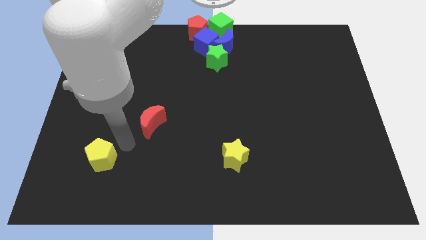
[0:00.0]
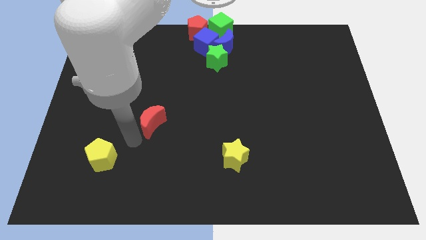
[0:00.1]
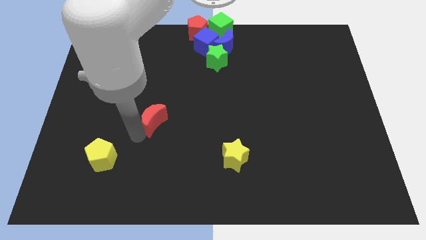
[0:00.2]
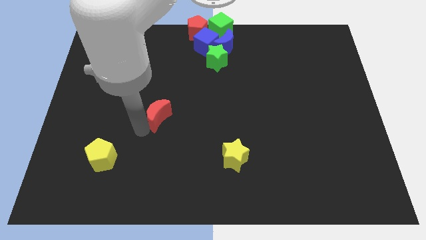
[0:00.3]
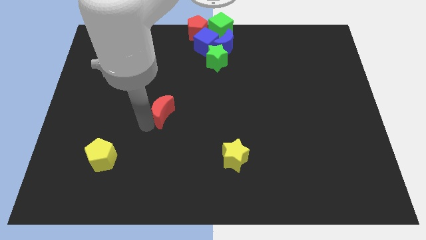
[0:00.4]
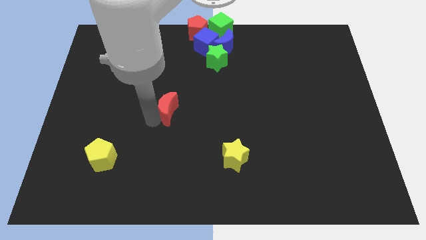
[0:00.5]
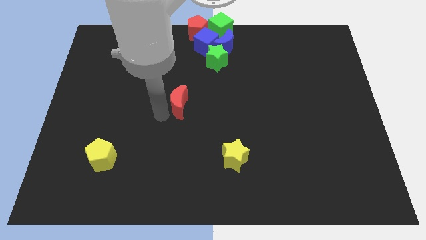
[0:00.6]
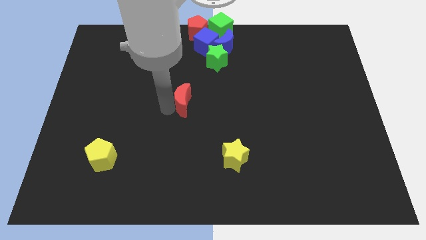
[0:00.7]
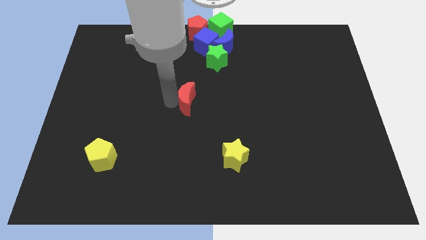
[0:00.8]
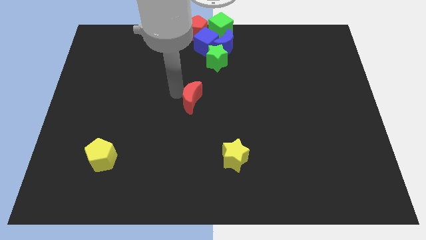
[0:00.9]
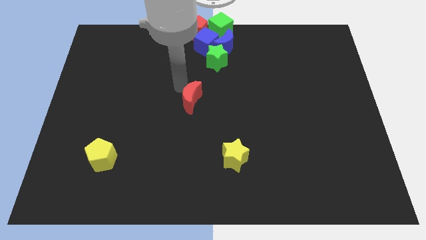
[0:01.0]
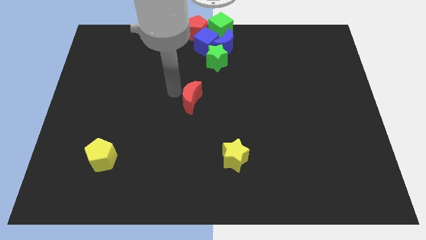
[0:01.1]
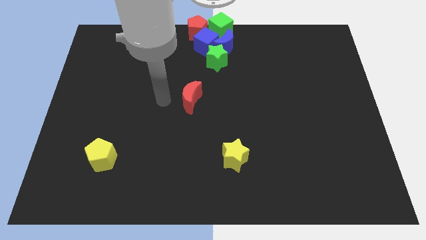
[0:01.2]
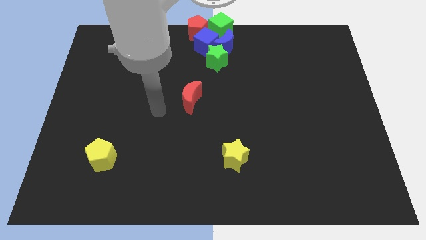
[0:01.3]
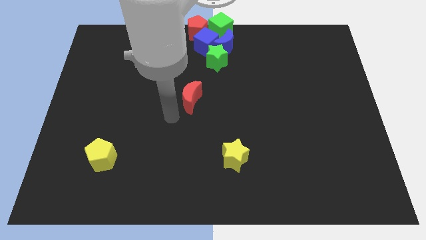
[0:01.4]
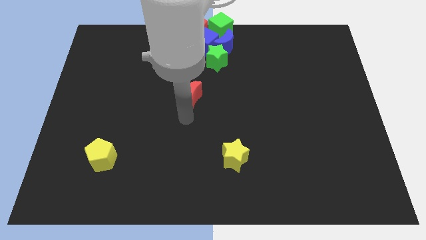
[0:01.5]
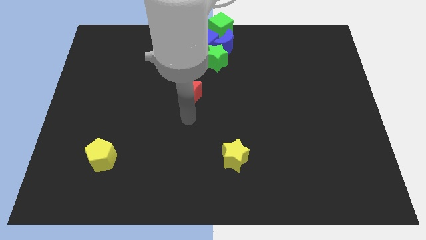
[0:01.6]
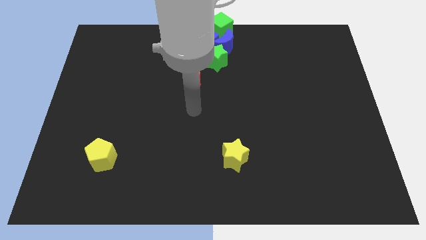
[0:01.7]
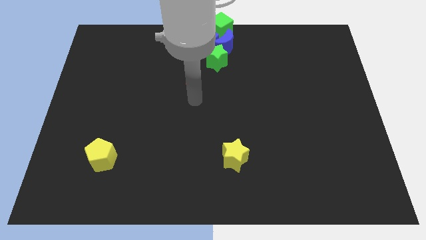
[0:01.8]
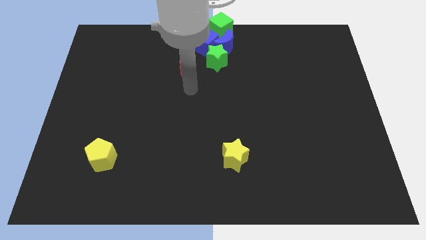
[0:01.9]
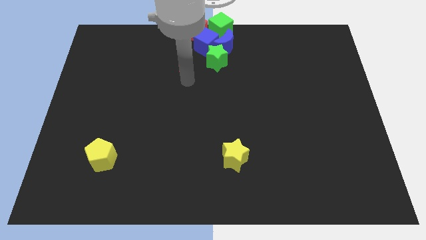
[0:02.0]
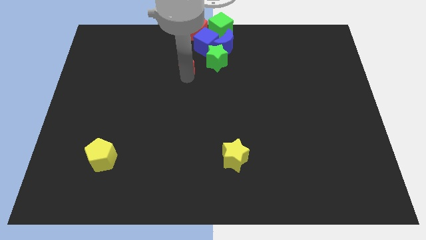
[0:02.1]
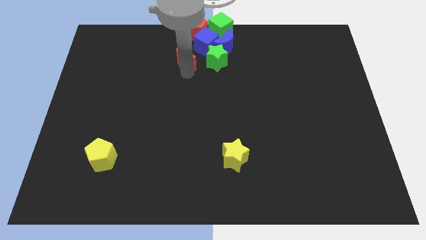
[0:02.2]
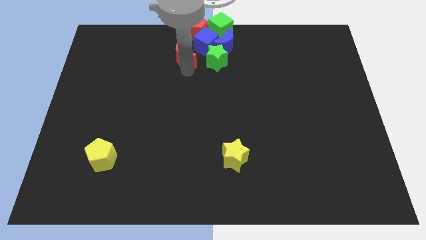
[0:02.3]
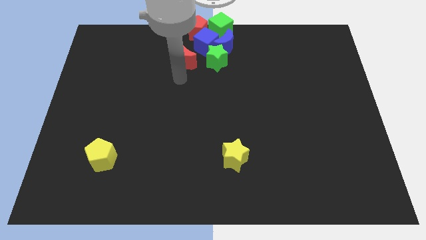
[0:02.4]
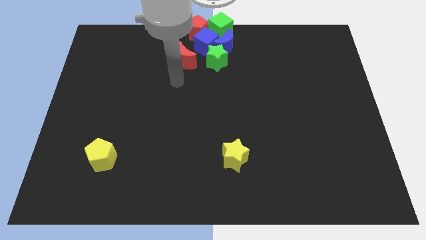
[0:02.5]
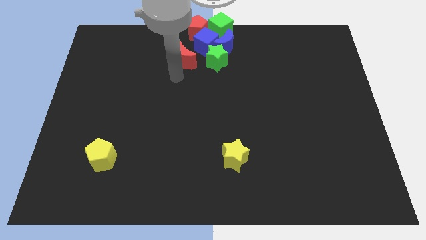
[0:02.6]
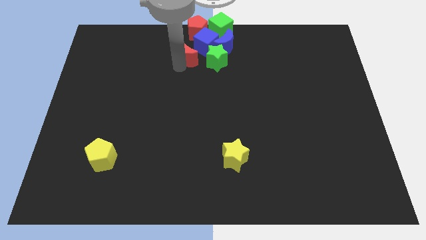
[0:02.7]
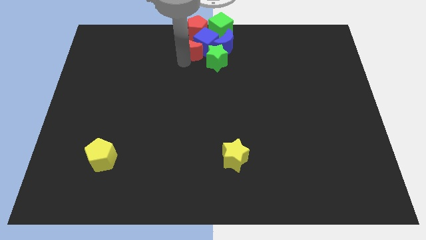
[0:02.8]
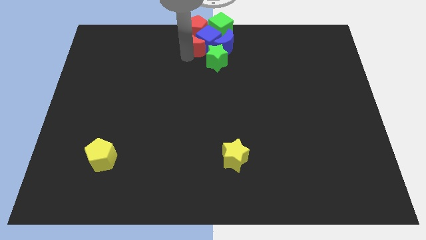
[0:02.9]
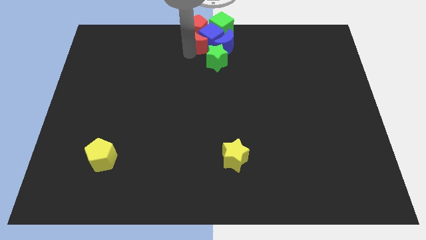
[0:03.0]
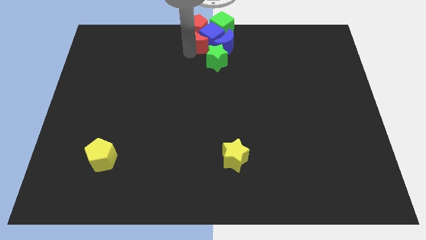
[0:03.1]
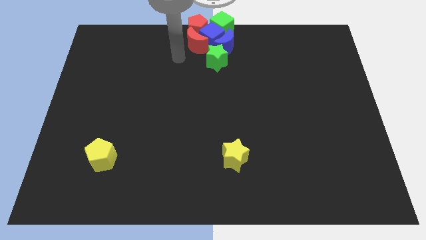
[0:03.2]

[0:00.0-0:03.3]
move the red crescent into the group of blocks

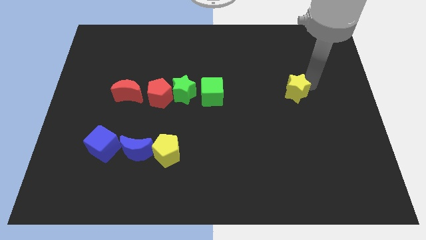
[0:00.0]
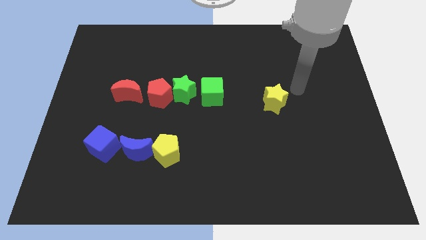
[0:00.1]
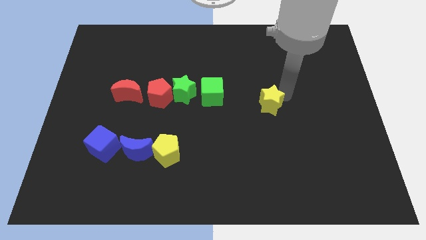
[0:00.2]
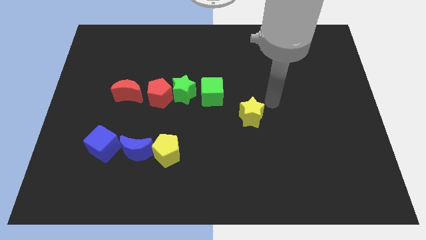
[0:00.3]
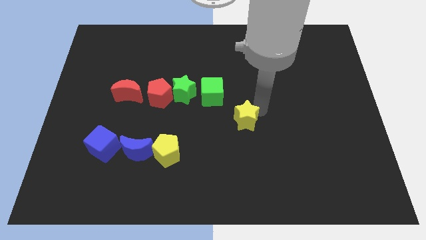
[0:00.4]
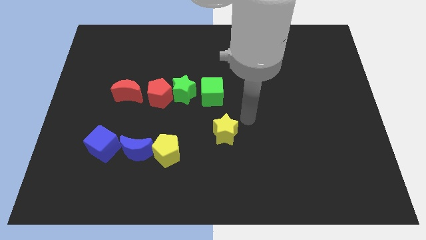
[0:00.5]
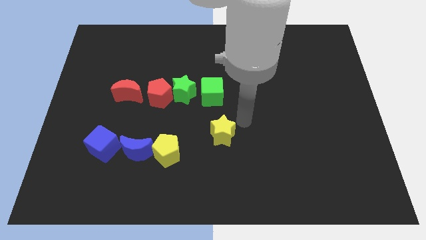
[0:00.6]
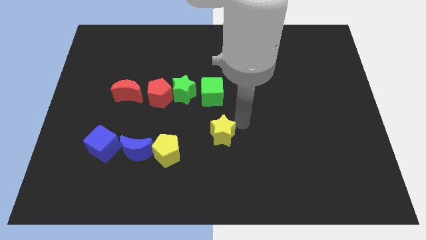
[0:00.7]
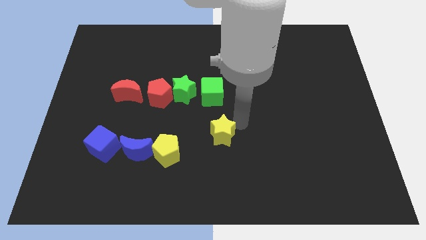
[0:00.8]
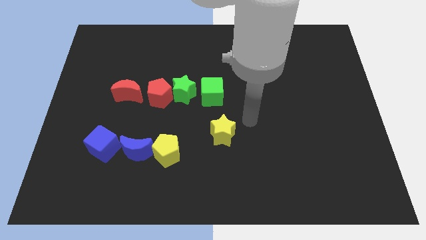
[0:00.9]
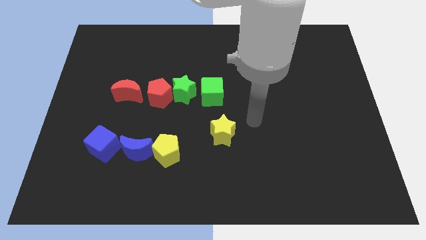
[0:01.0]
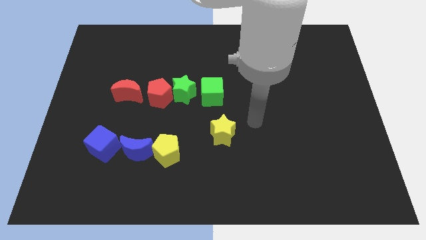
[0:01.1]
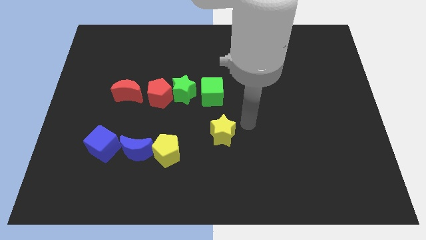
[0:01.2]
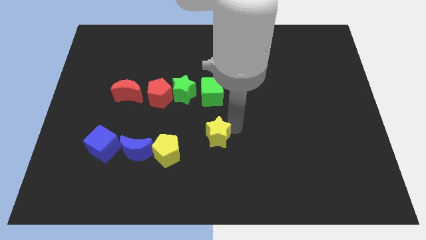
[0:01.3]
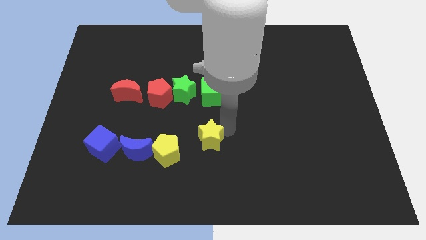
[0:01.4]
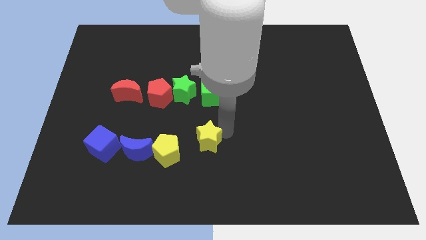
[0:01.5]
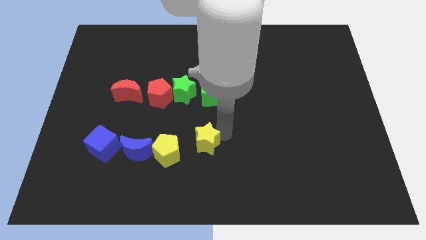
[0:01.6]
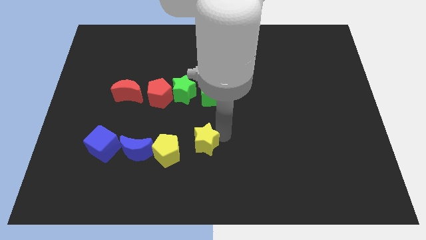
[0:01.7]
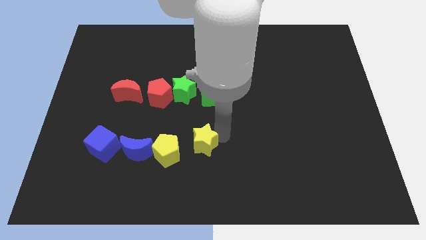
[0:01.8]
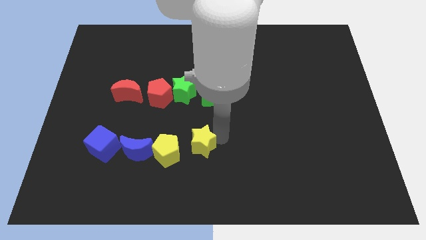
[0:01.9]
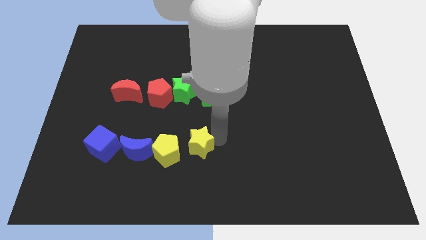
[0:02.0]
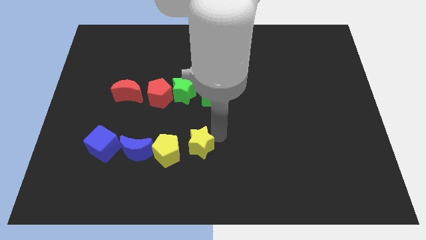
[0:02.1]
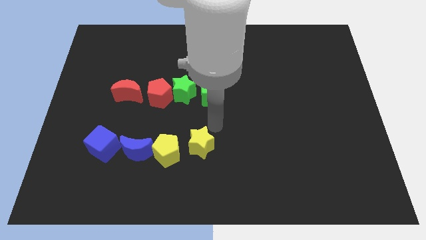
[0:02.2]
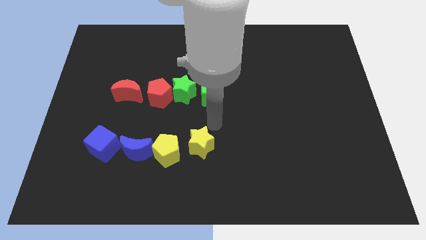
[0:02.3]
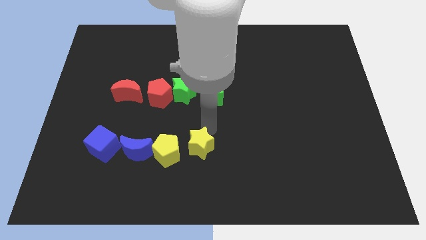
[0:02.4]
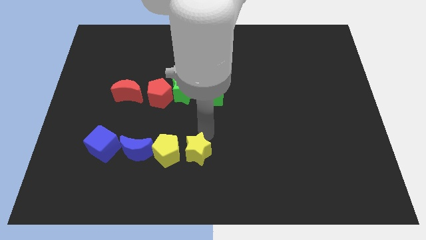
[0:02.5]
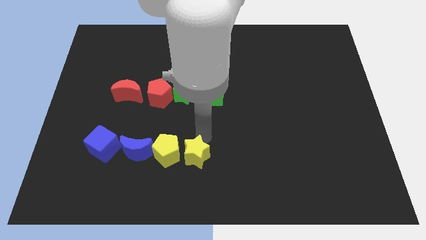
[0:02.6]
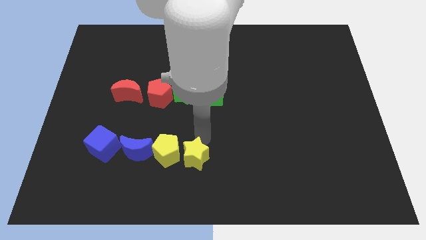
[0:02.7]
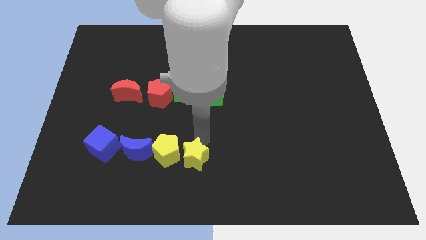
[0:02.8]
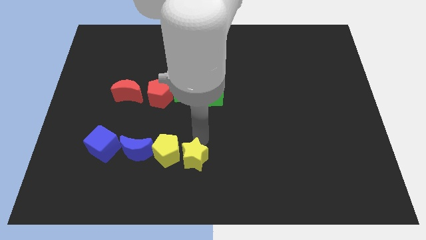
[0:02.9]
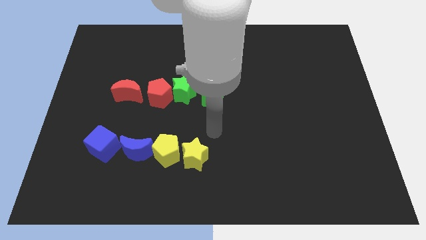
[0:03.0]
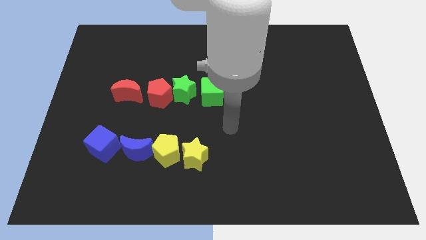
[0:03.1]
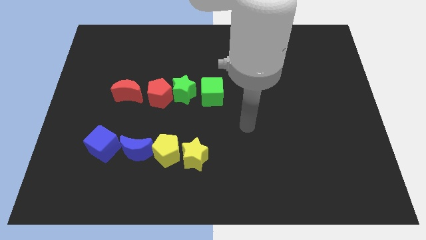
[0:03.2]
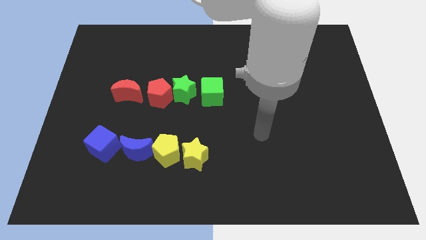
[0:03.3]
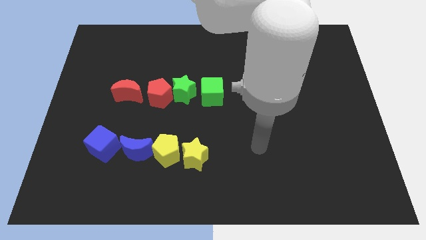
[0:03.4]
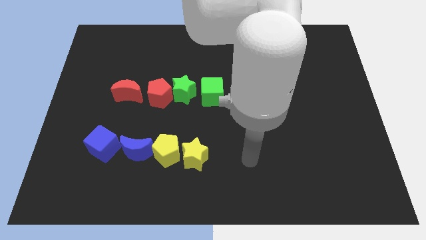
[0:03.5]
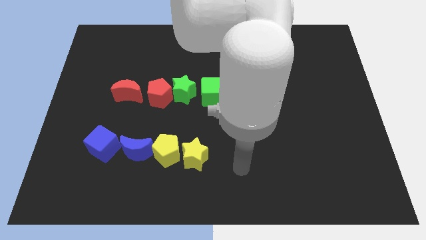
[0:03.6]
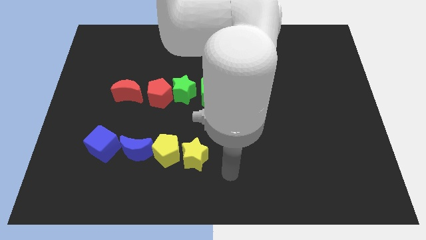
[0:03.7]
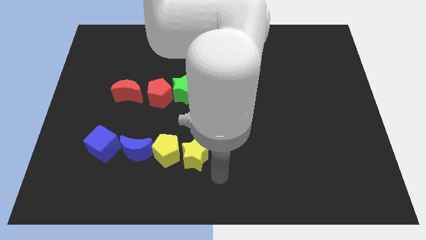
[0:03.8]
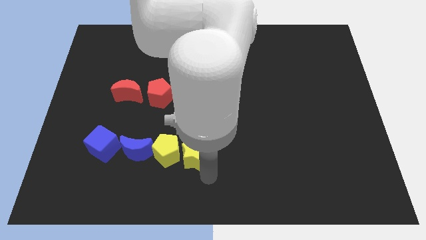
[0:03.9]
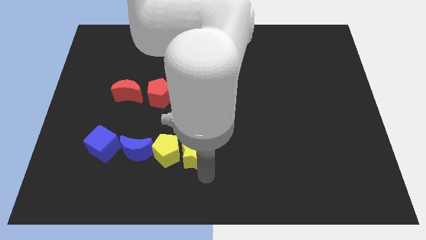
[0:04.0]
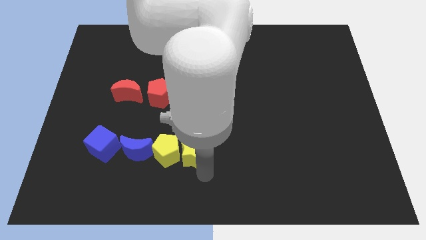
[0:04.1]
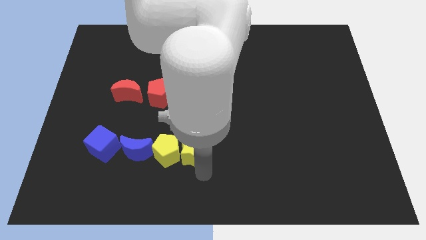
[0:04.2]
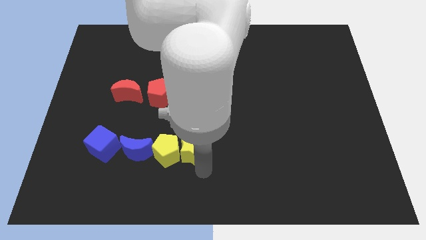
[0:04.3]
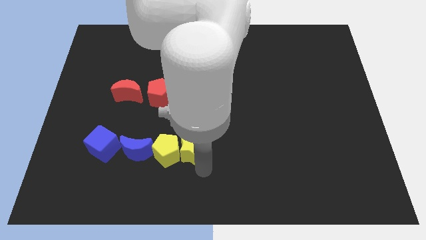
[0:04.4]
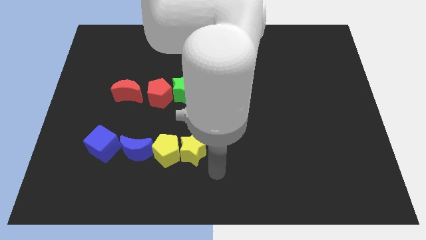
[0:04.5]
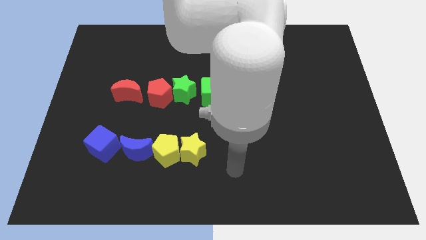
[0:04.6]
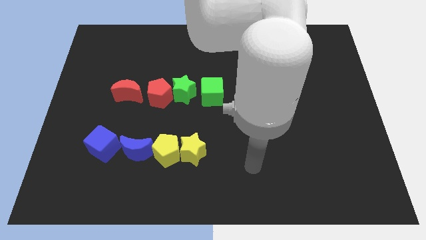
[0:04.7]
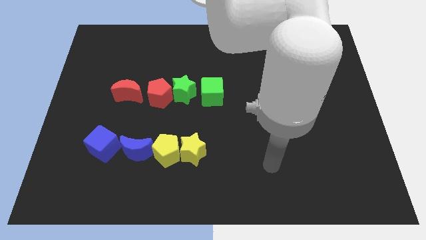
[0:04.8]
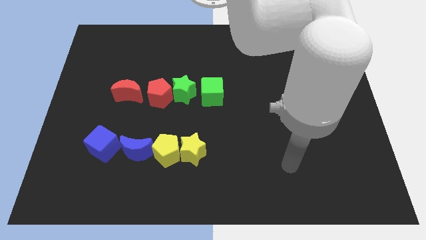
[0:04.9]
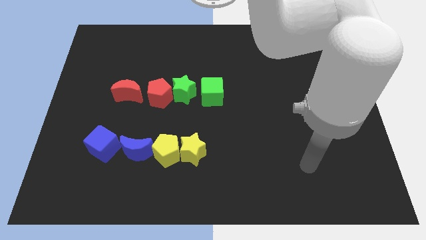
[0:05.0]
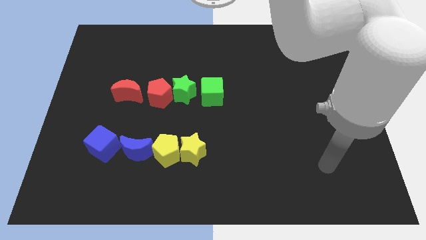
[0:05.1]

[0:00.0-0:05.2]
slide yellow star into yellow pentagon

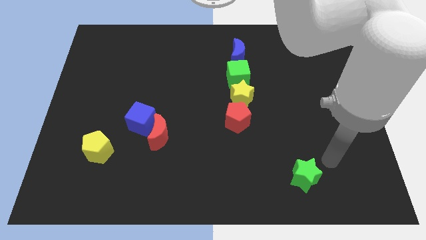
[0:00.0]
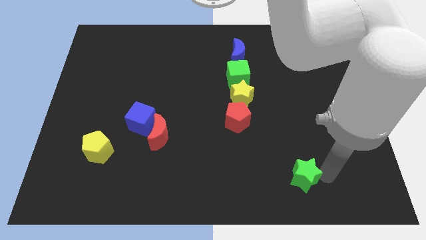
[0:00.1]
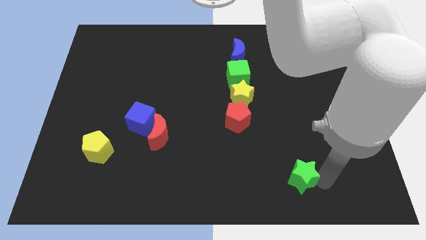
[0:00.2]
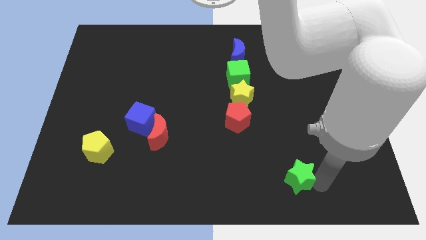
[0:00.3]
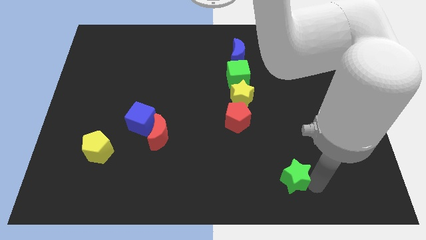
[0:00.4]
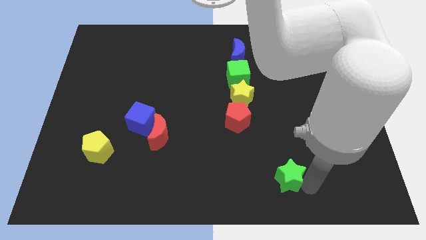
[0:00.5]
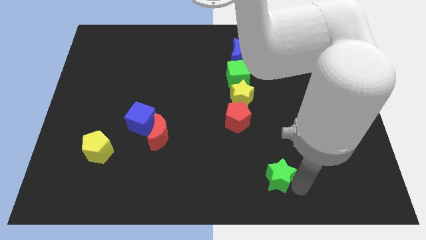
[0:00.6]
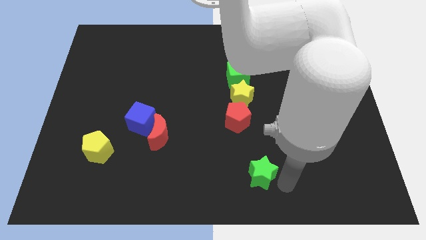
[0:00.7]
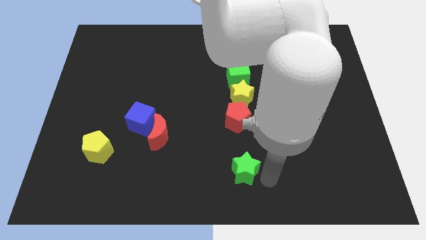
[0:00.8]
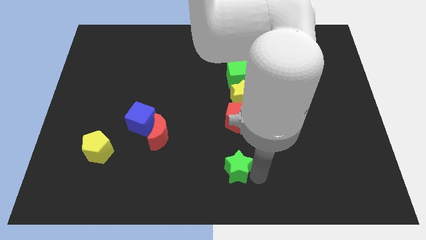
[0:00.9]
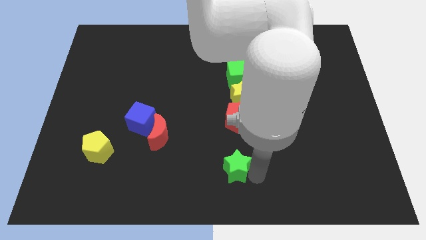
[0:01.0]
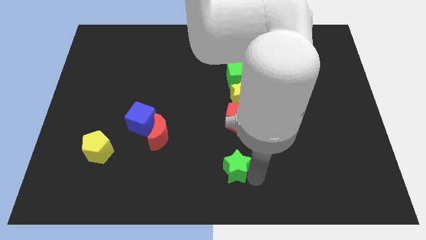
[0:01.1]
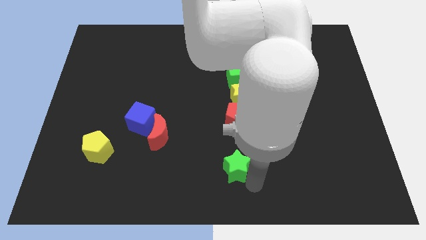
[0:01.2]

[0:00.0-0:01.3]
slide green star to the bottom center
